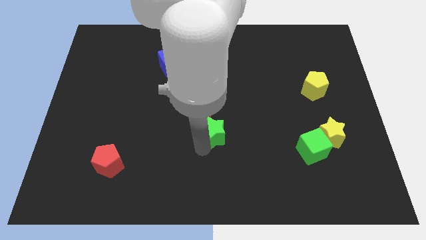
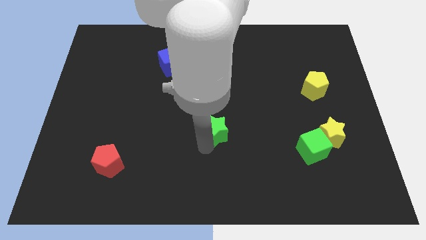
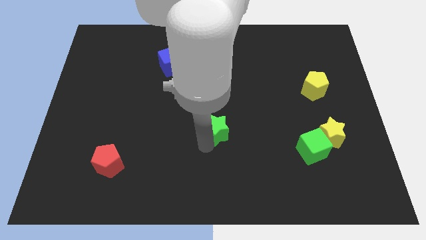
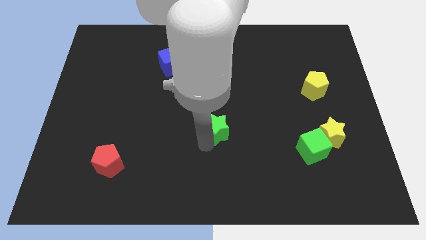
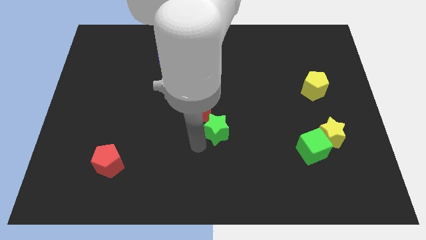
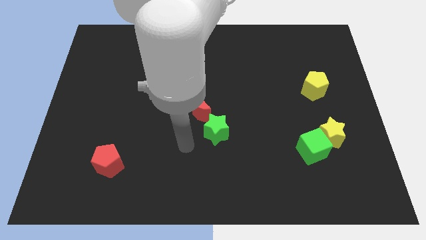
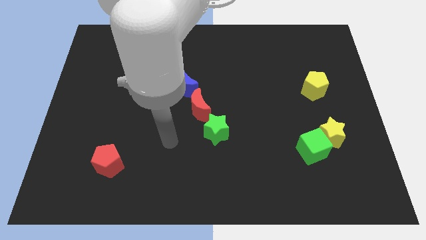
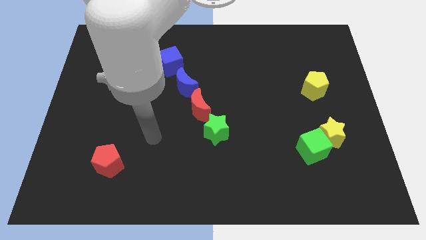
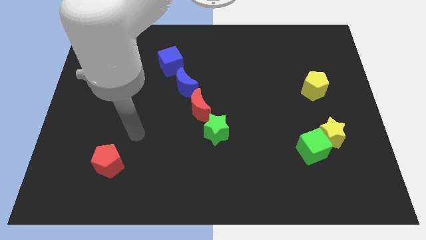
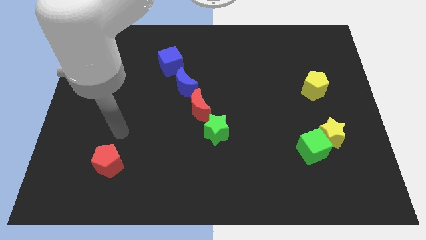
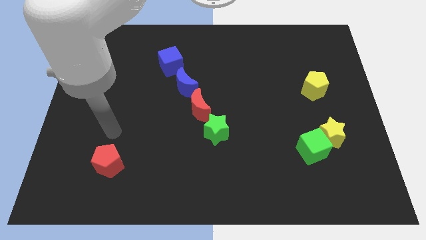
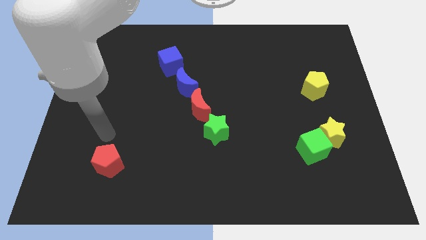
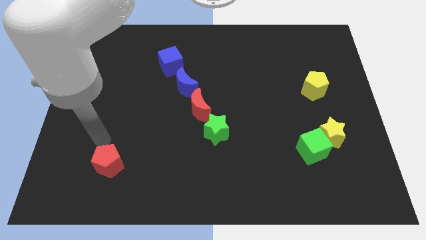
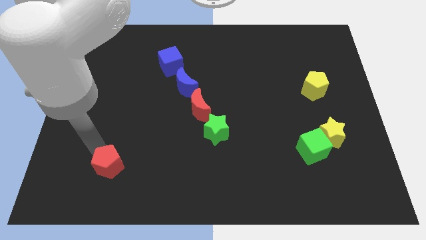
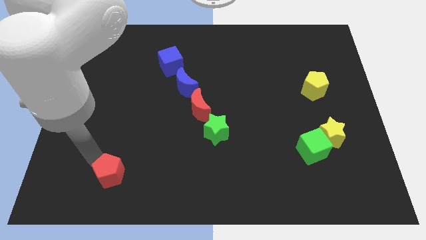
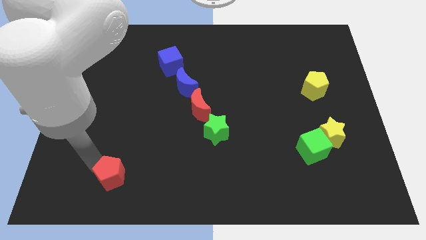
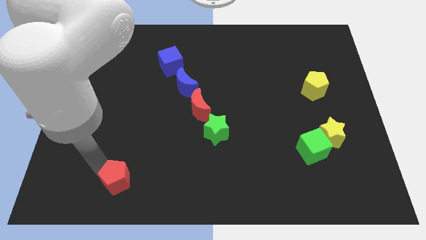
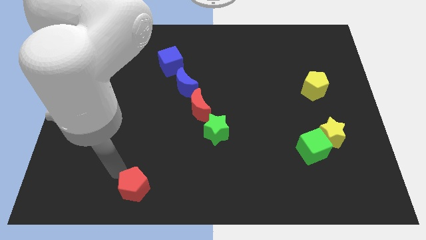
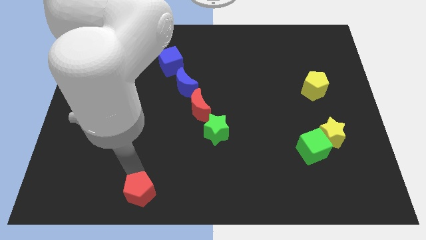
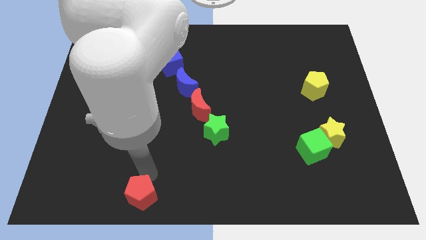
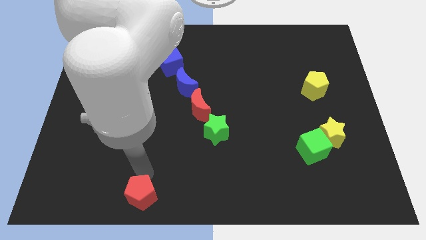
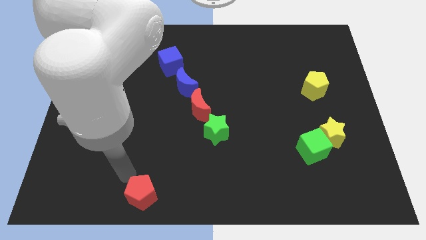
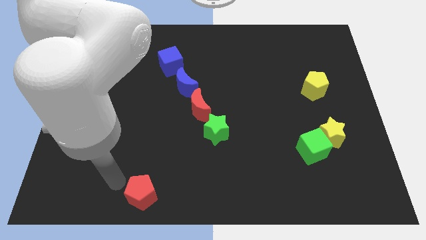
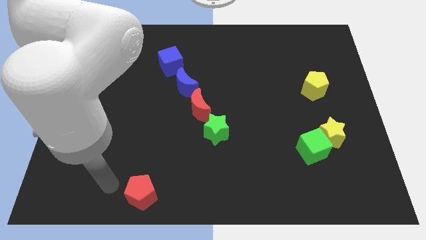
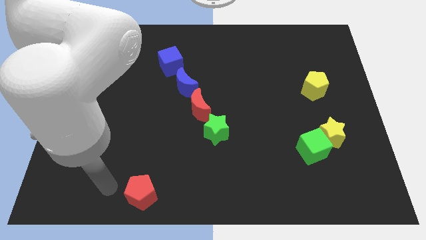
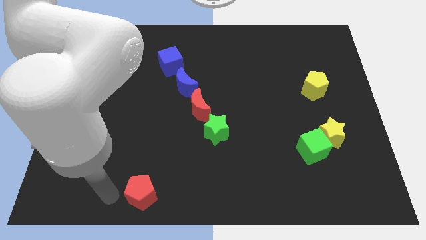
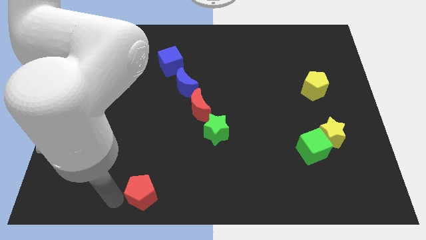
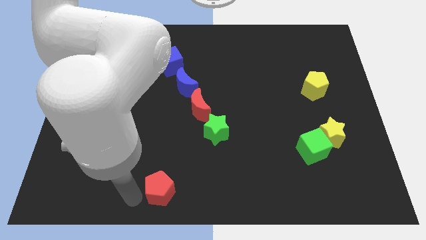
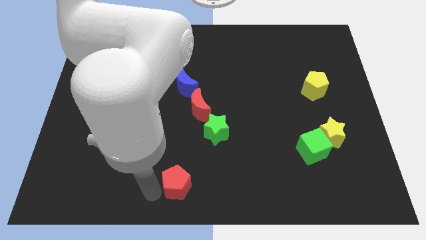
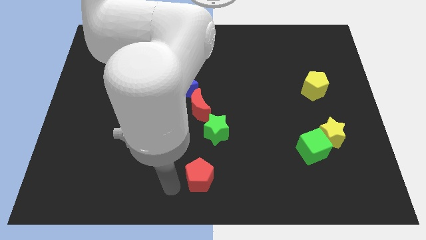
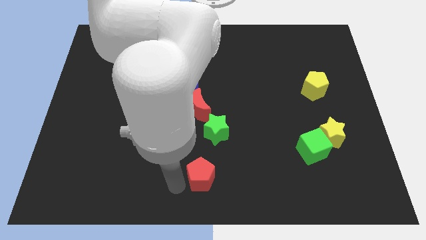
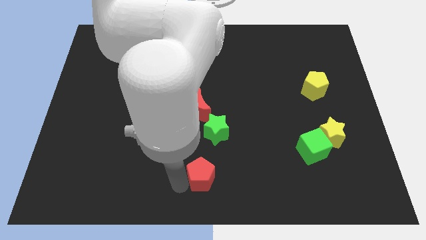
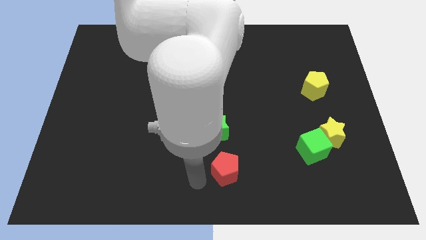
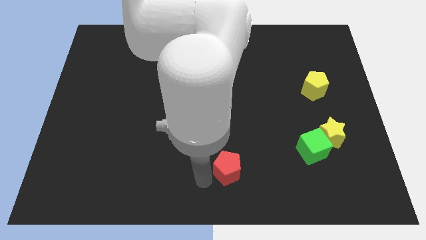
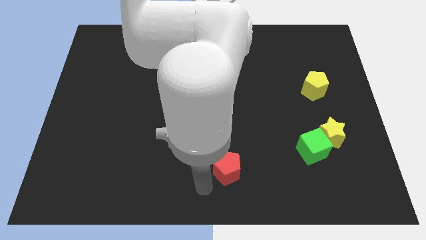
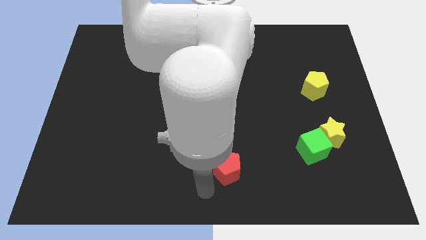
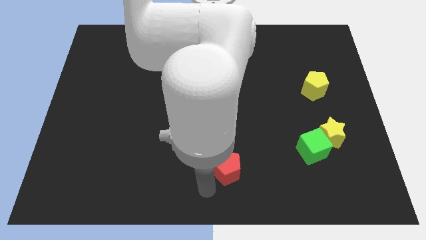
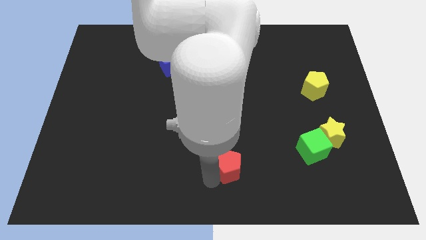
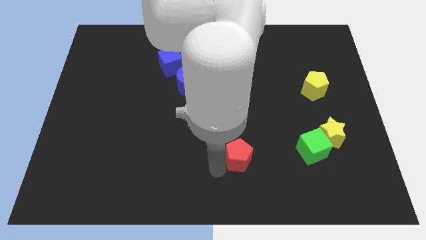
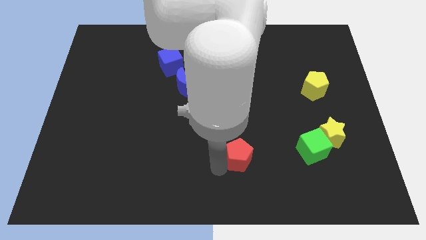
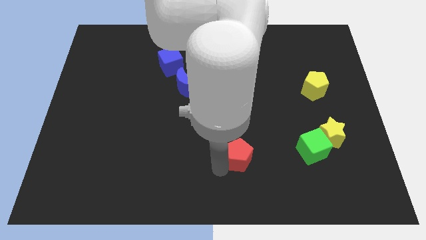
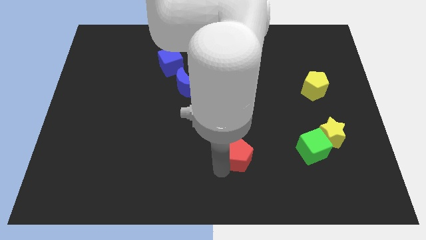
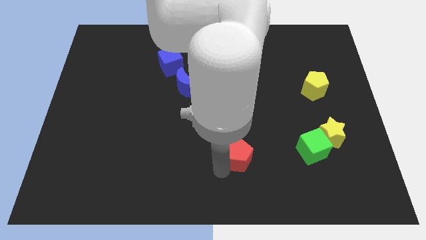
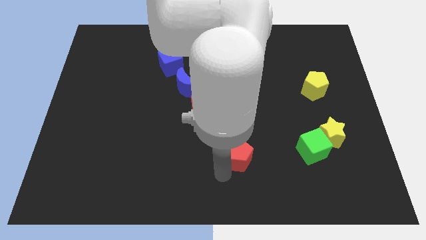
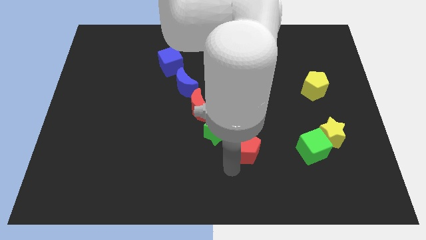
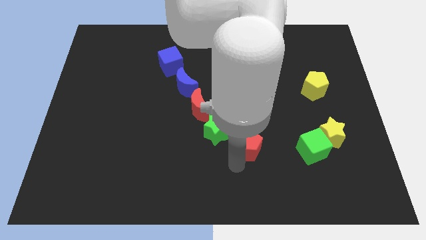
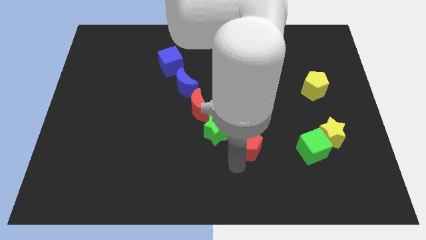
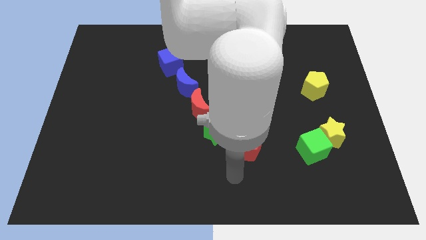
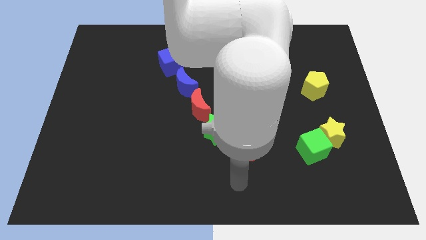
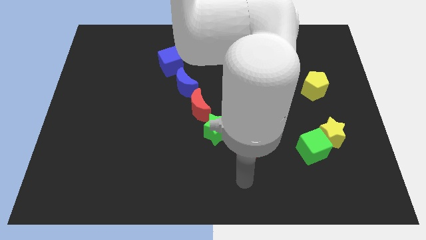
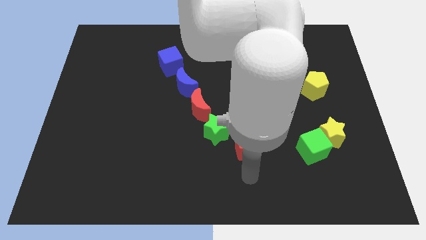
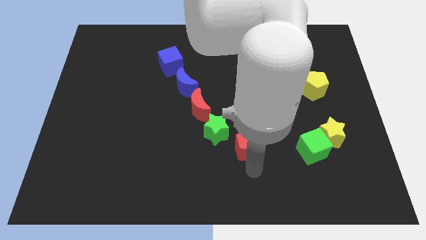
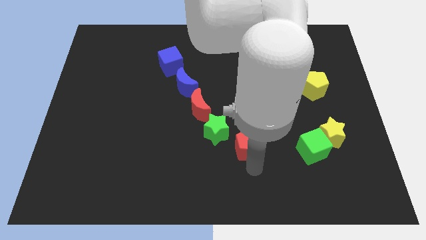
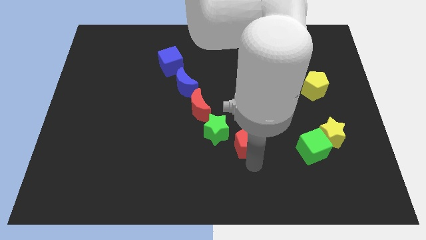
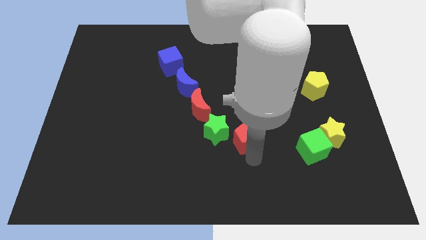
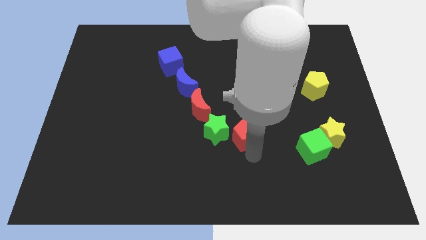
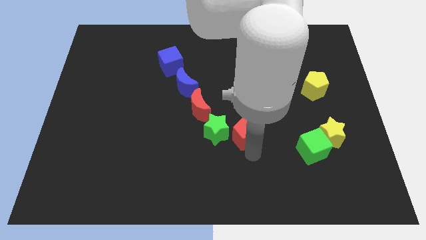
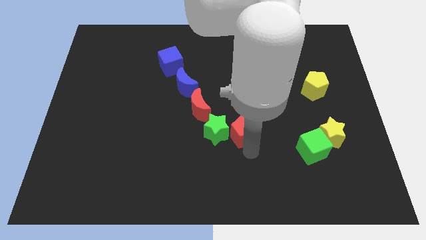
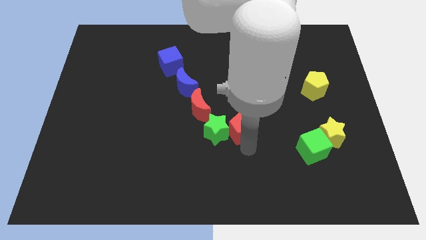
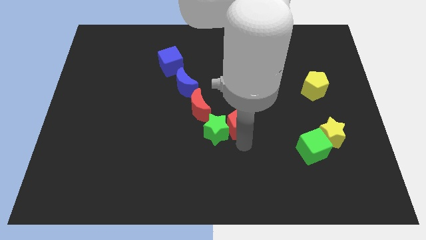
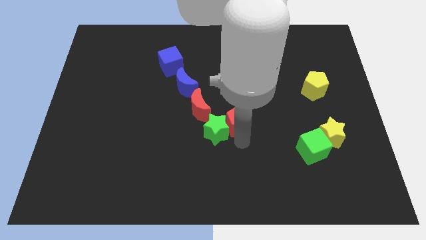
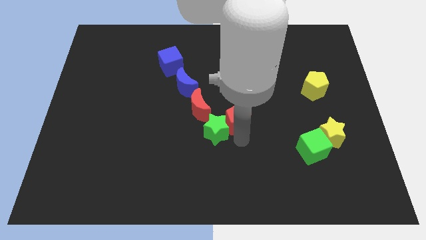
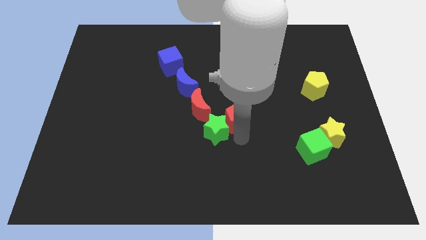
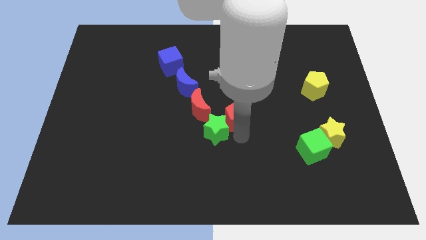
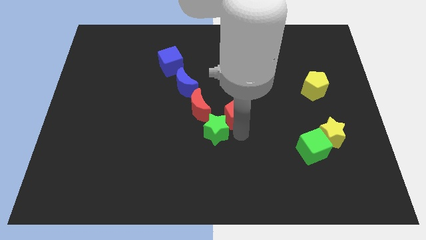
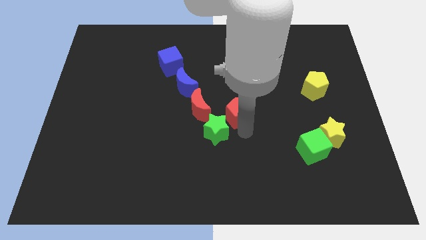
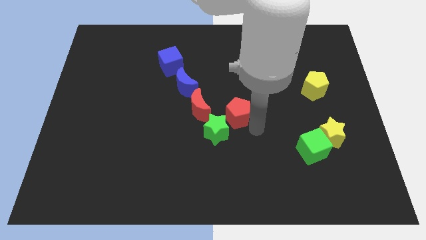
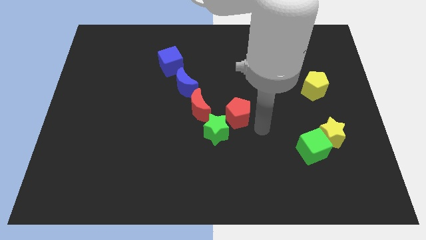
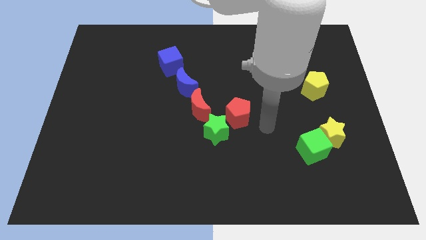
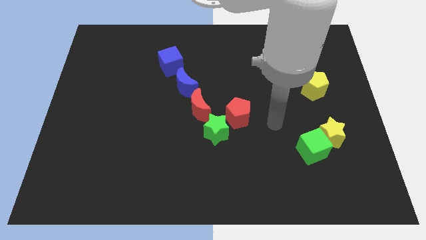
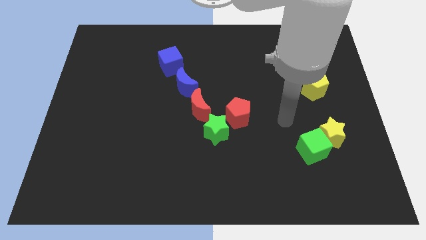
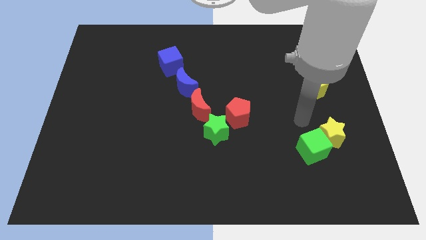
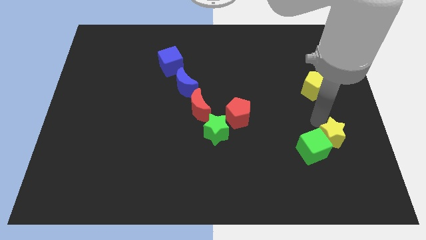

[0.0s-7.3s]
slide the red pentagon to the top right side of the green star

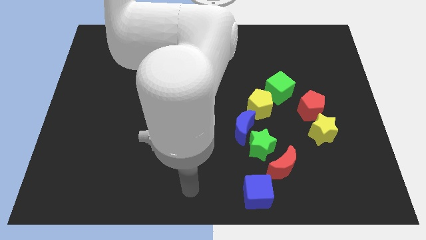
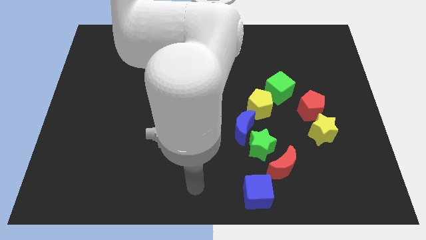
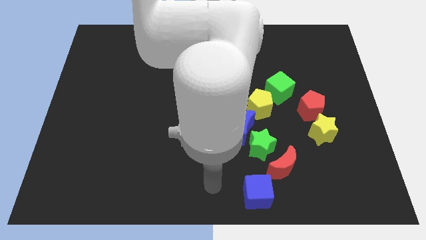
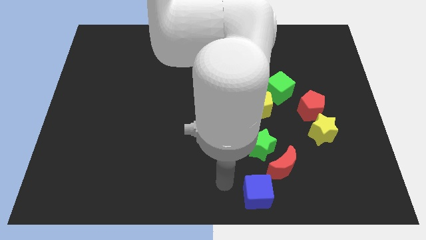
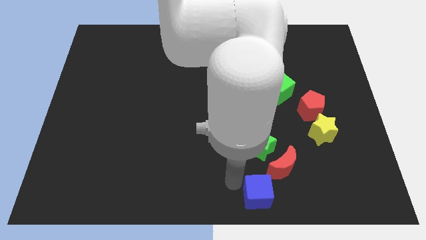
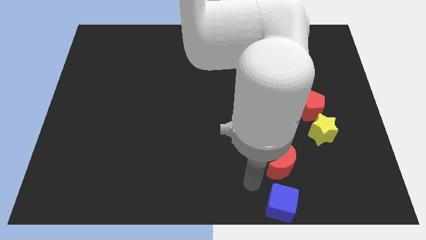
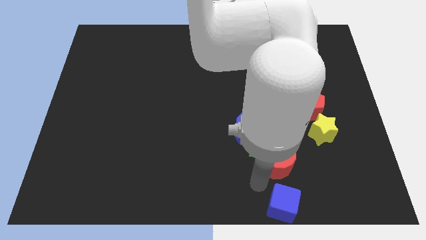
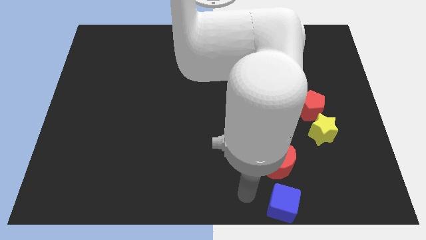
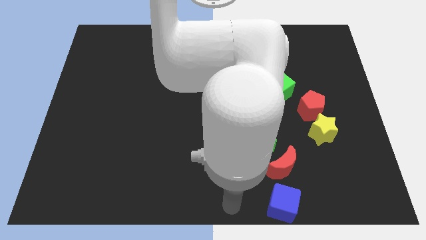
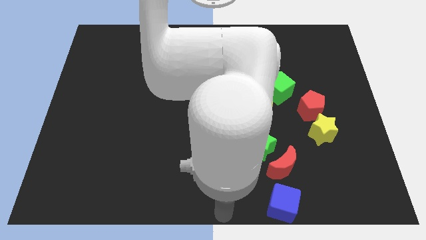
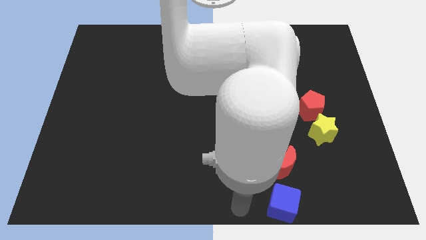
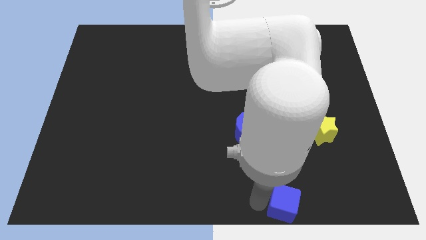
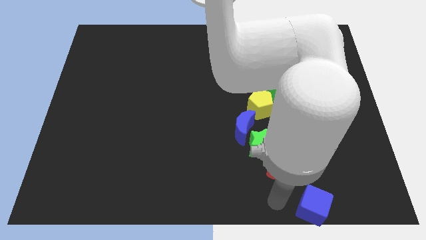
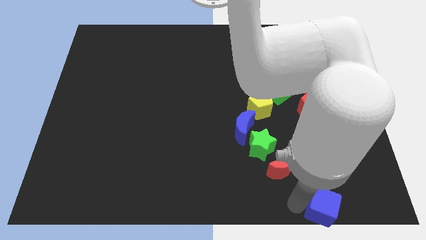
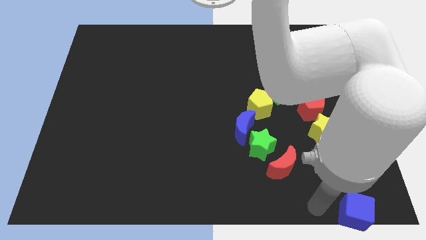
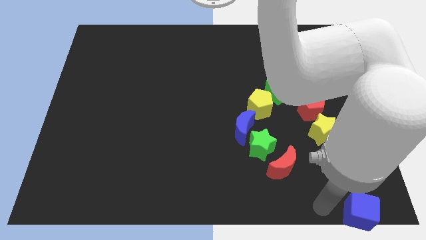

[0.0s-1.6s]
move the blue cube towards bottom right side

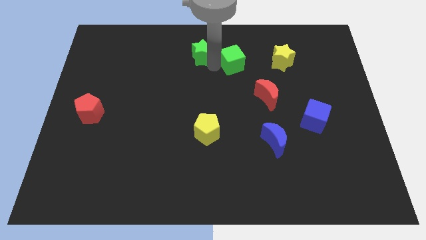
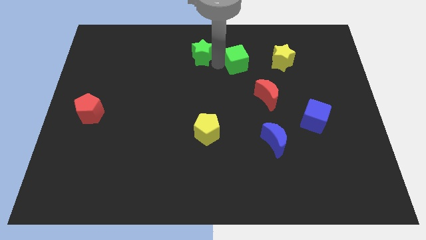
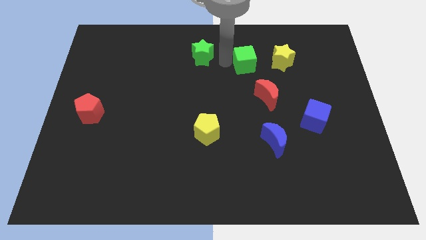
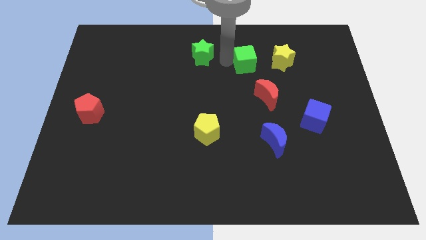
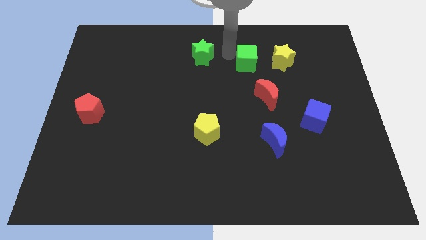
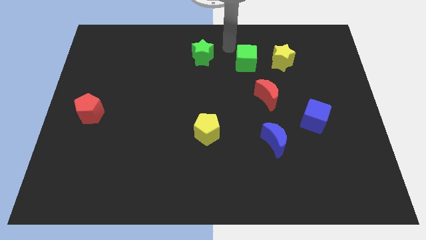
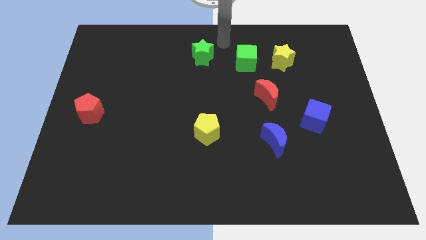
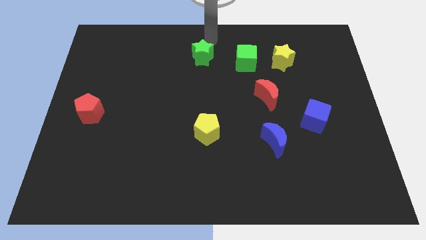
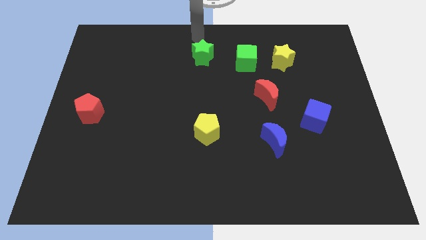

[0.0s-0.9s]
place the arm above the green star
